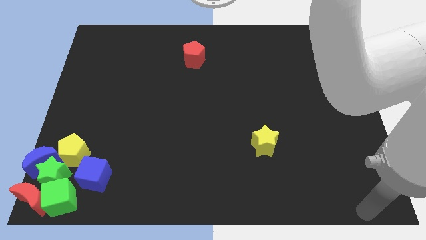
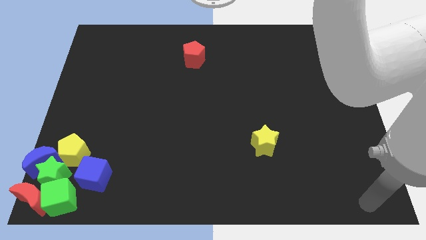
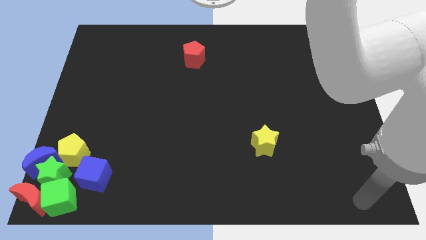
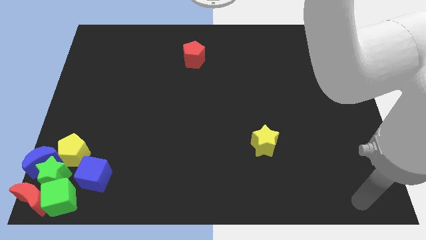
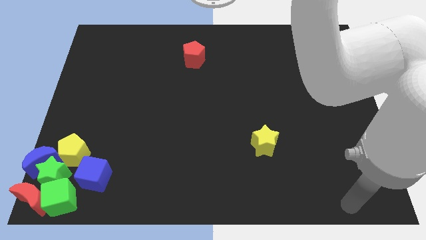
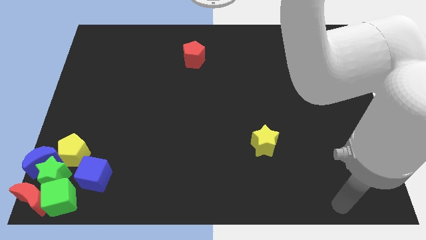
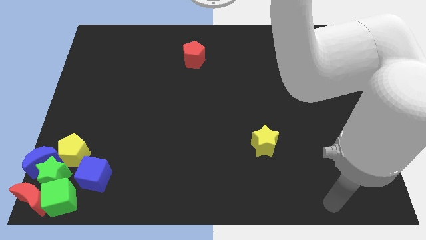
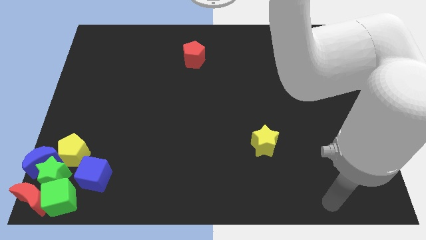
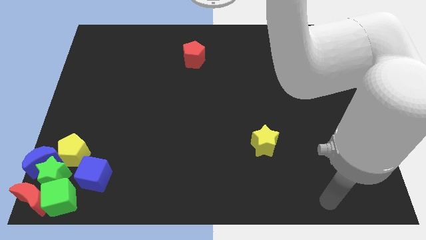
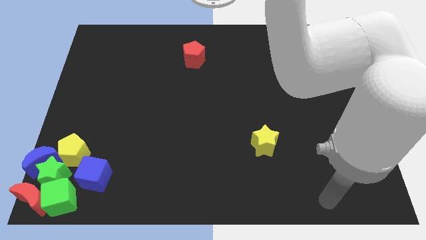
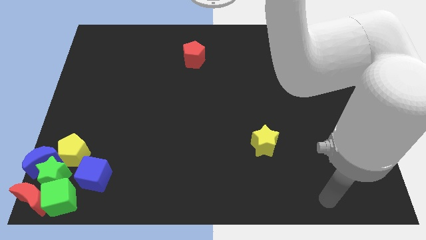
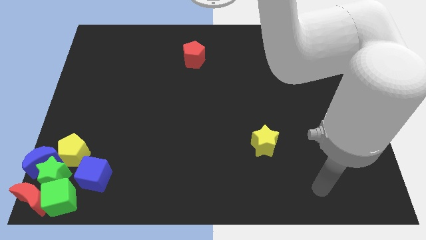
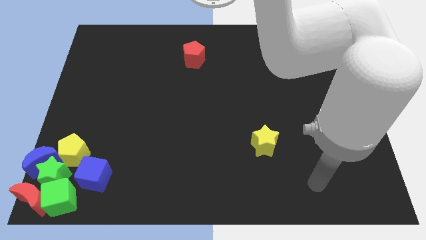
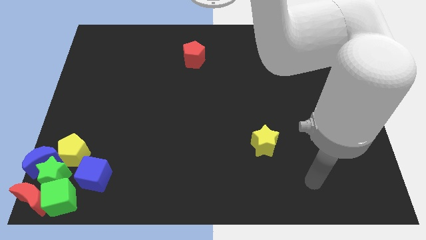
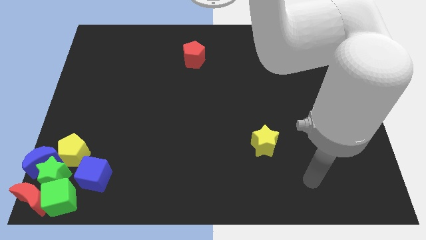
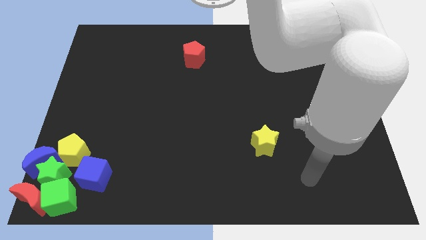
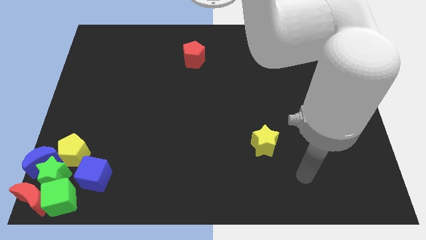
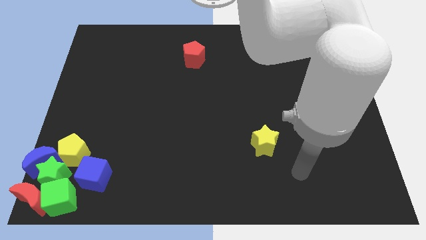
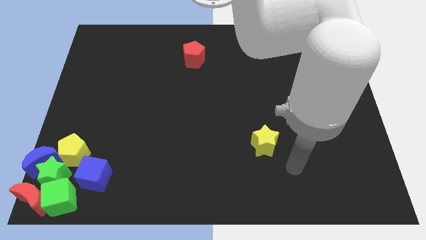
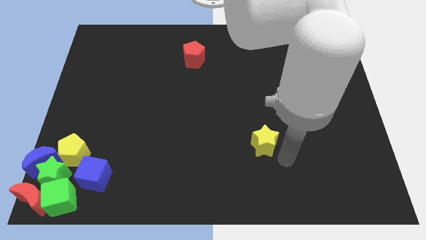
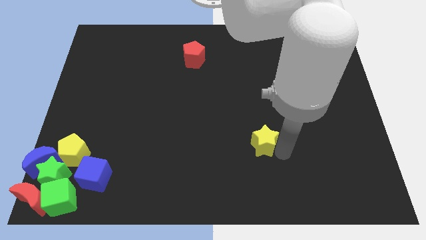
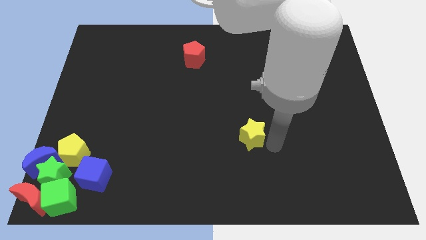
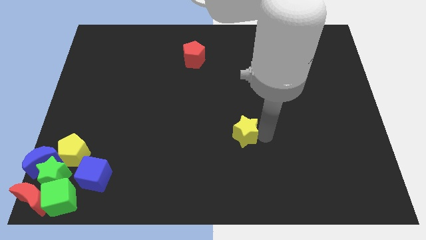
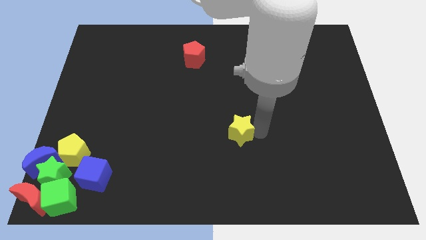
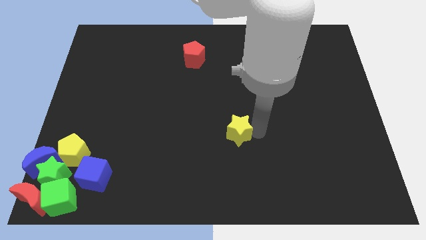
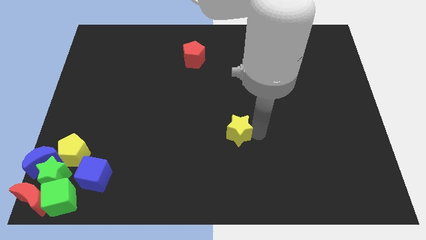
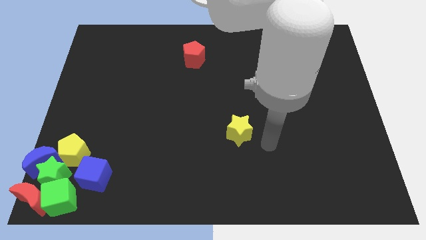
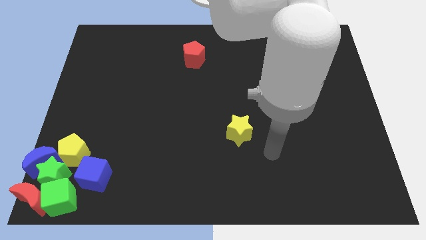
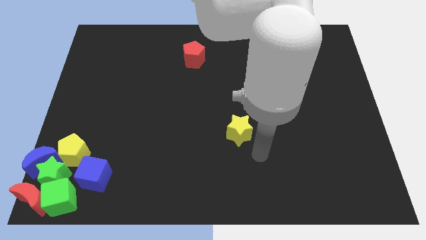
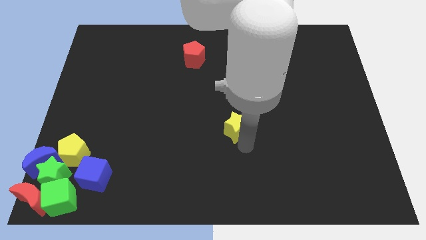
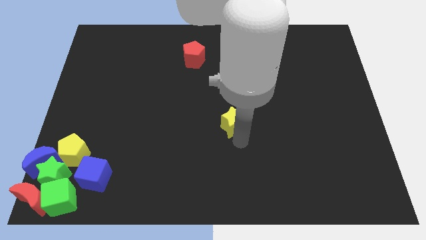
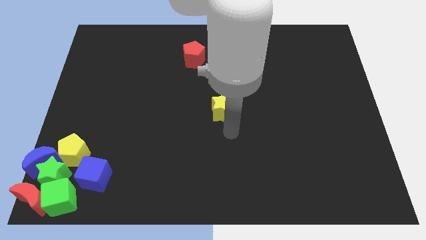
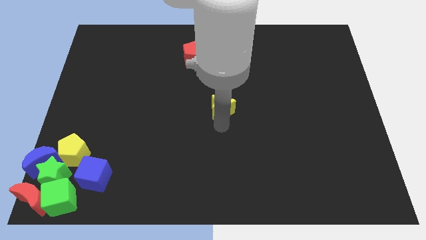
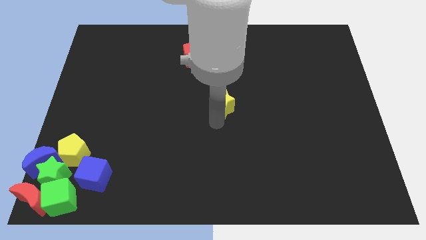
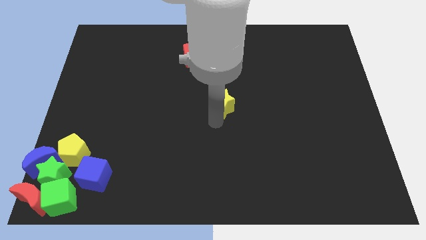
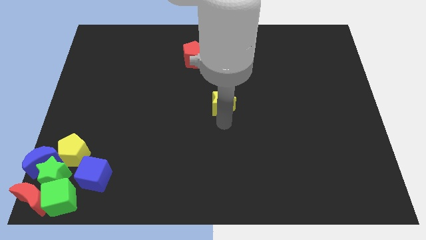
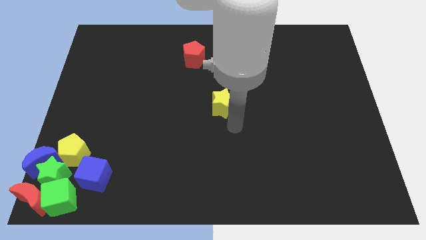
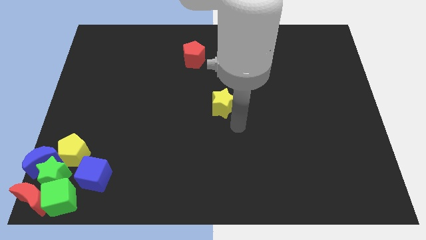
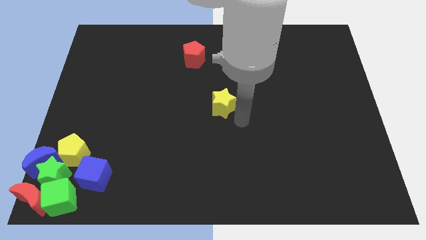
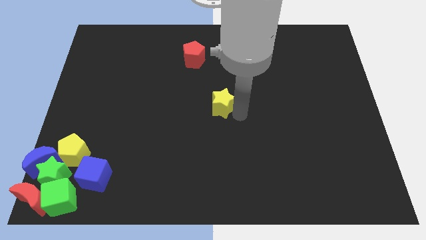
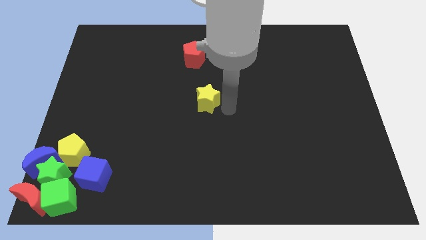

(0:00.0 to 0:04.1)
place the yellow star to the middle of the board

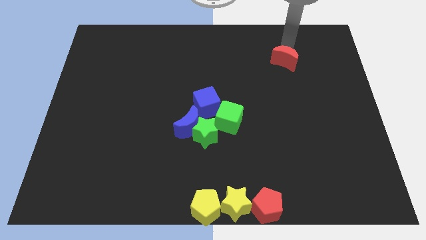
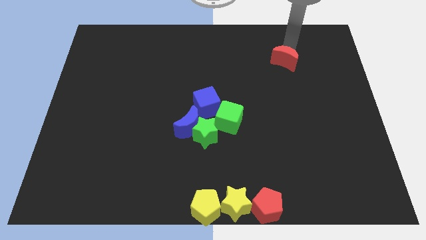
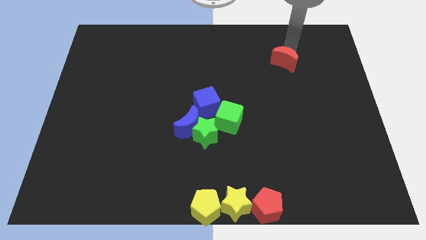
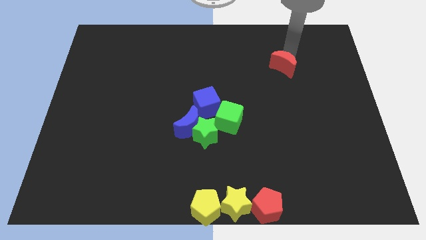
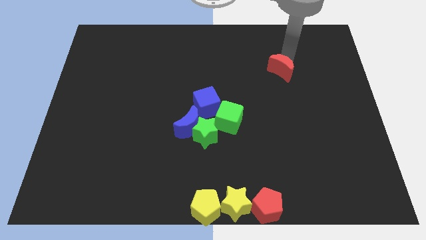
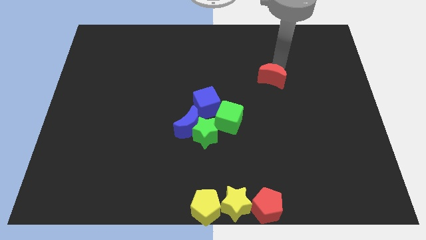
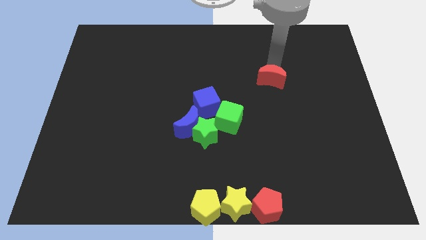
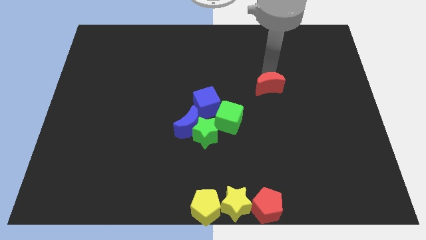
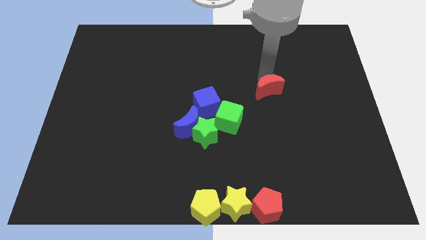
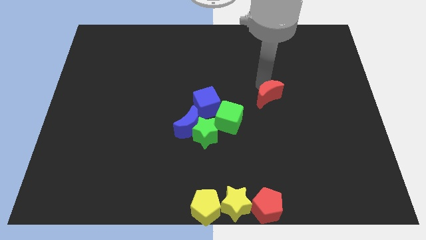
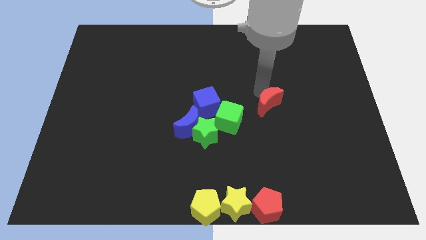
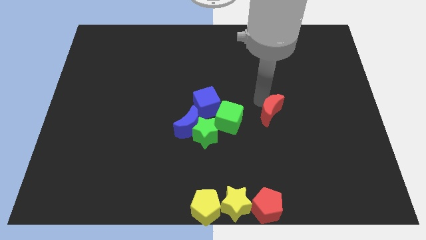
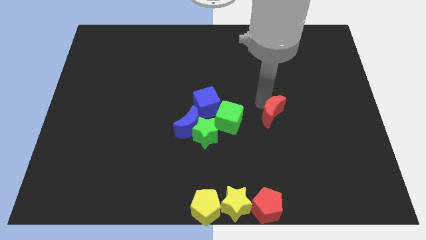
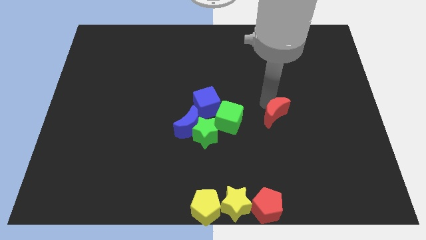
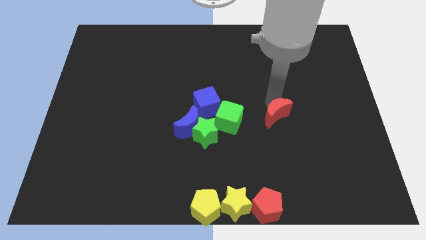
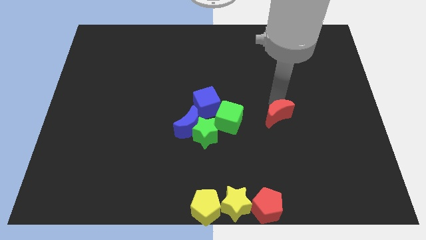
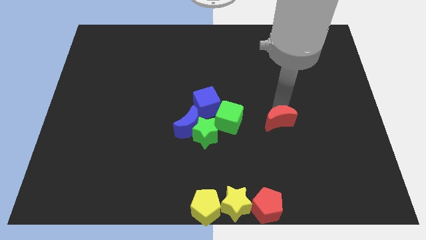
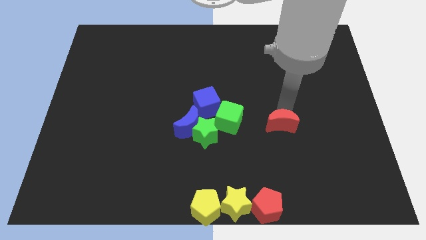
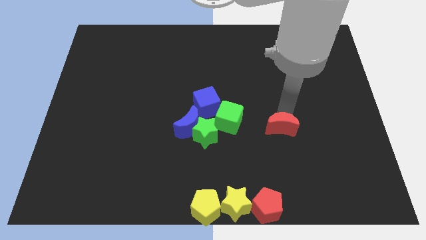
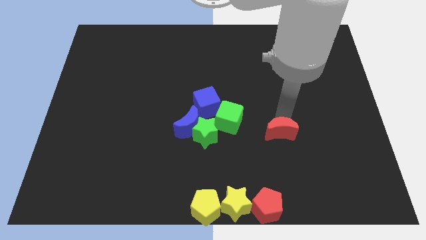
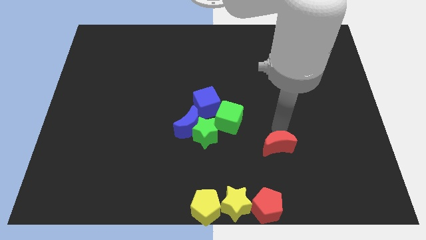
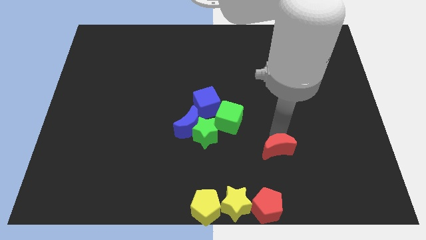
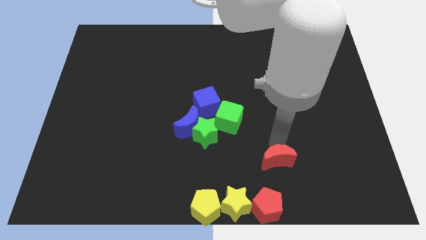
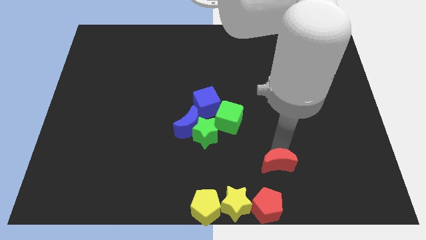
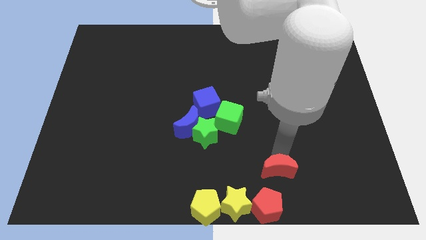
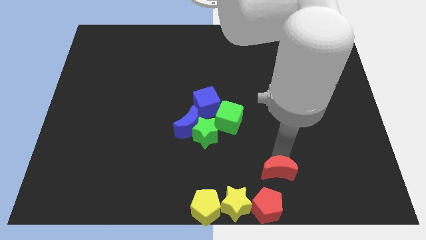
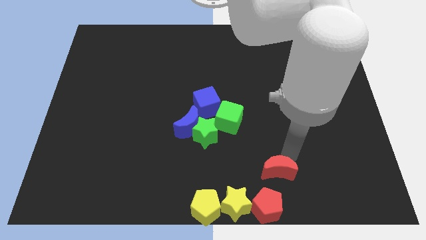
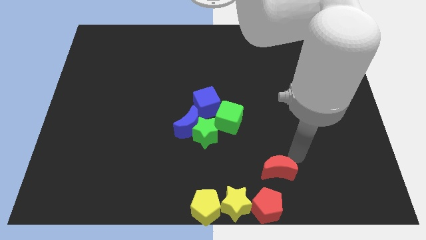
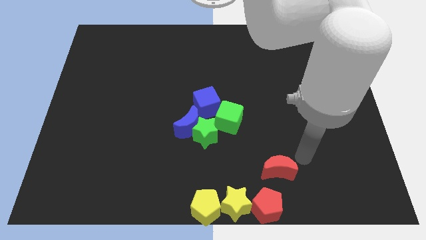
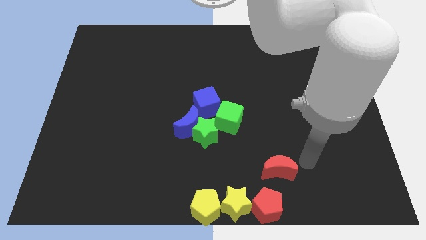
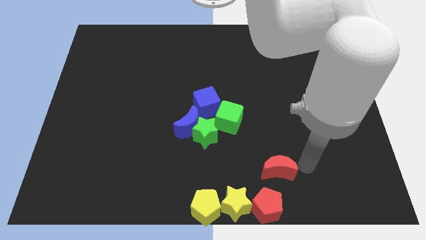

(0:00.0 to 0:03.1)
drag the red crescent downwards

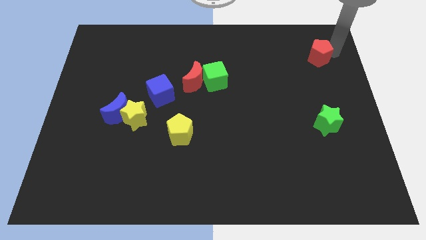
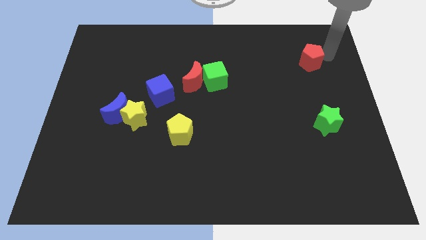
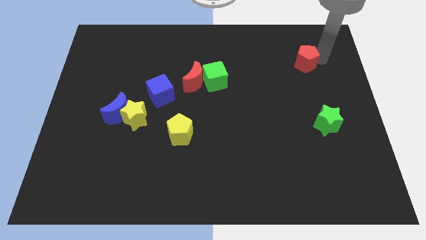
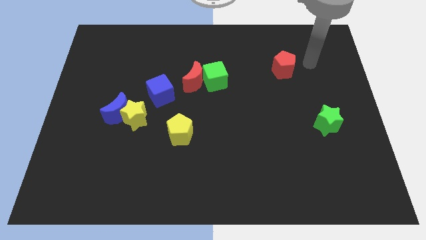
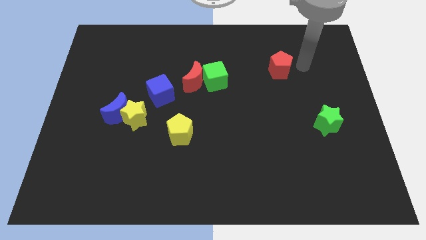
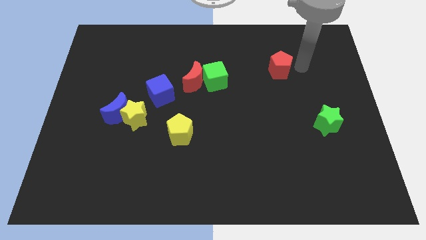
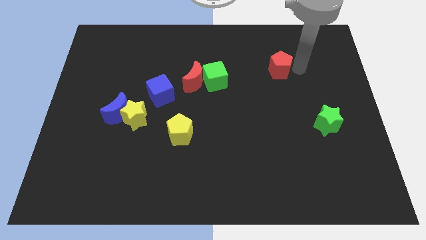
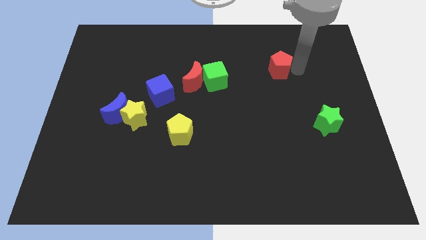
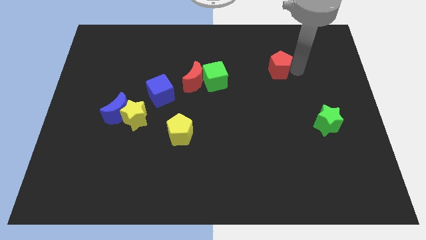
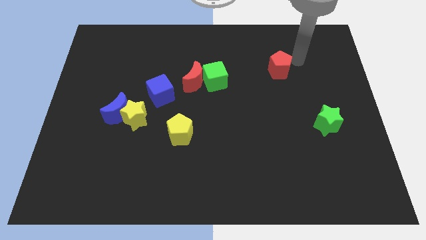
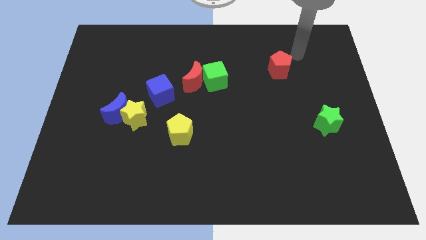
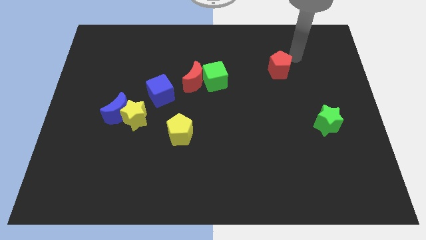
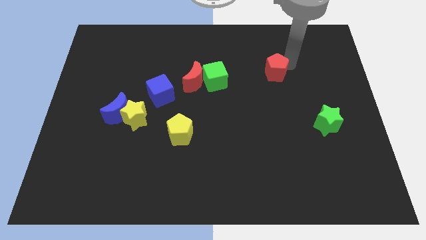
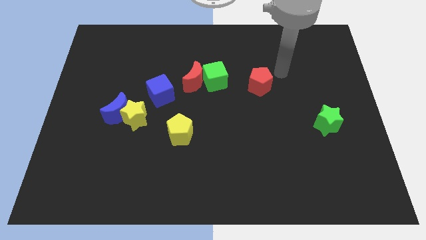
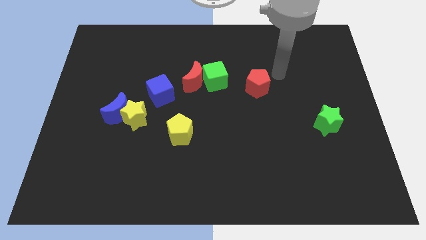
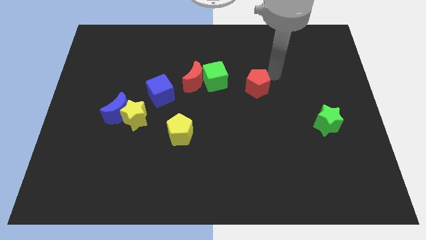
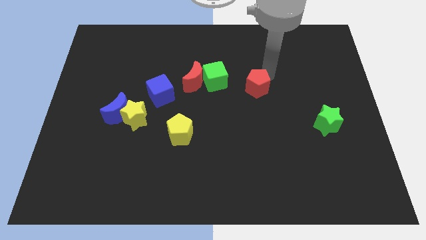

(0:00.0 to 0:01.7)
push the red pentagon towards the center of the board

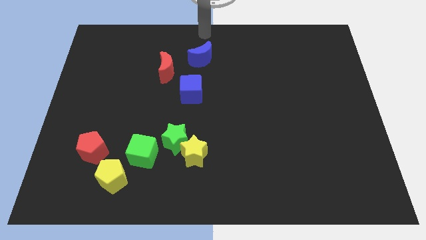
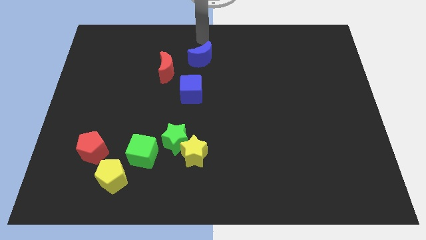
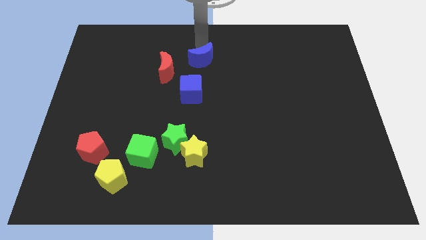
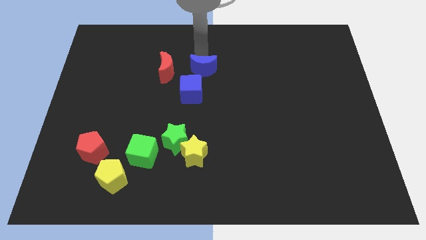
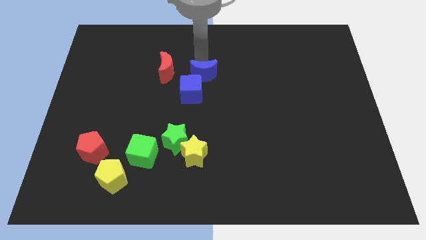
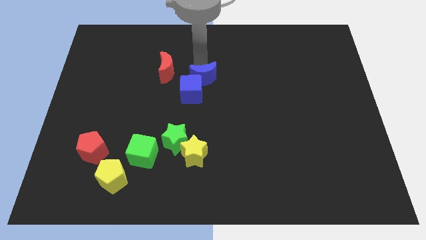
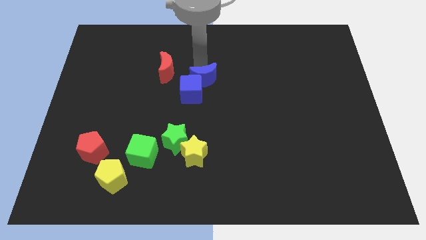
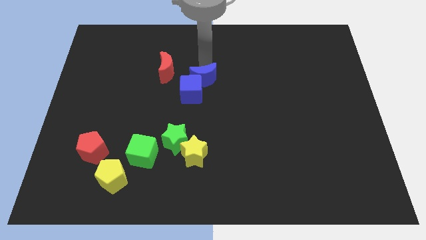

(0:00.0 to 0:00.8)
place the blue crescent above the blue cube
